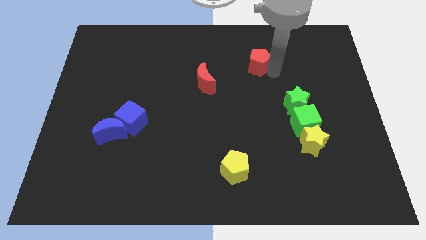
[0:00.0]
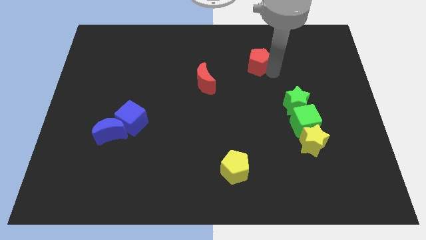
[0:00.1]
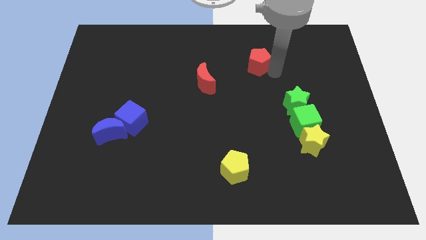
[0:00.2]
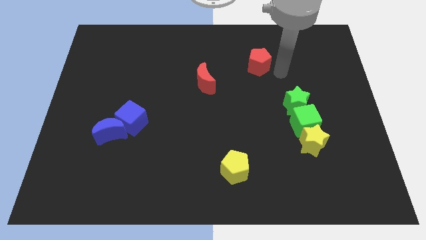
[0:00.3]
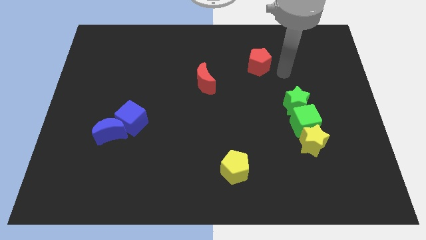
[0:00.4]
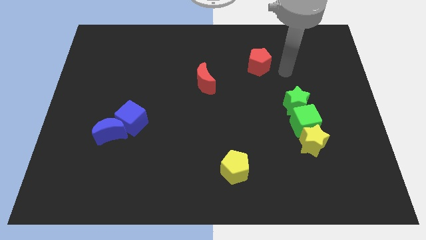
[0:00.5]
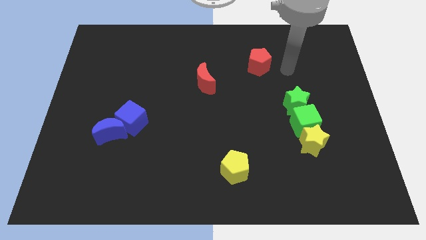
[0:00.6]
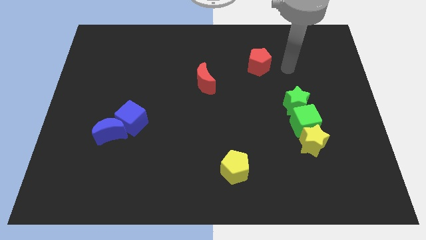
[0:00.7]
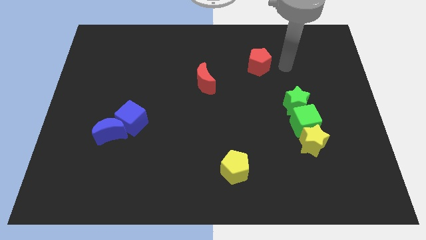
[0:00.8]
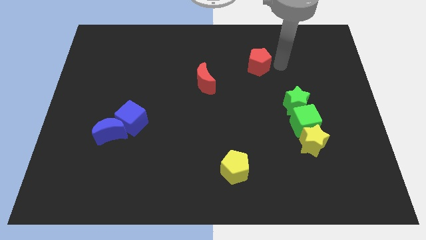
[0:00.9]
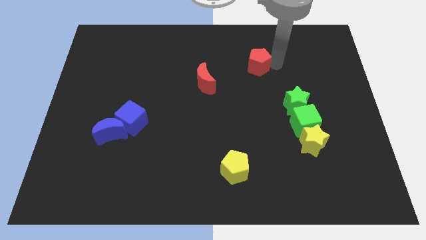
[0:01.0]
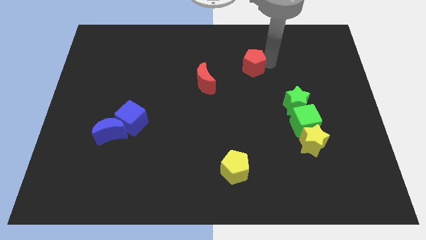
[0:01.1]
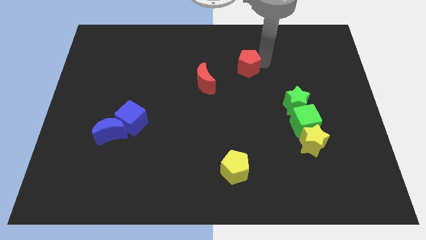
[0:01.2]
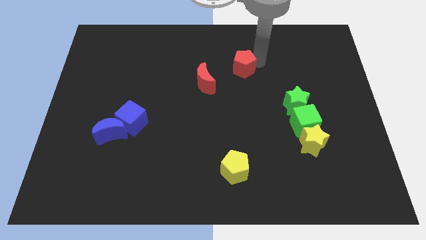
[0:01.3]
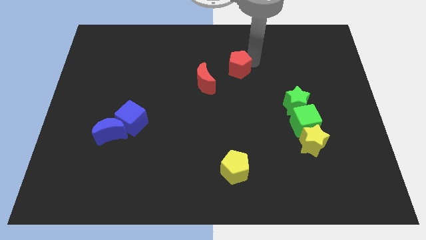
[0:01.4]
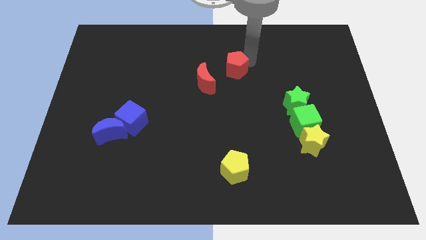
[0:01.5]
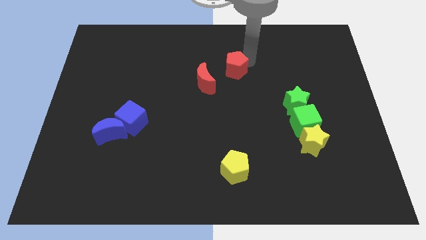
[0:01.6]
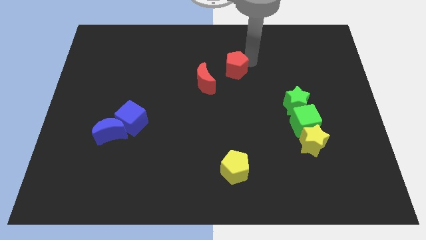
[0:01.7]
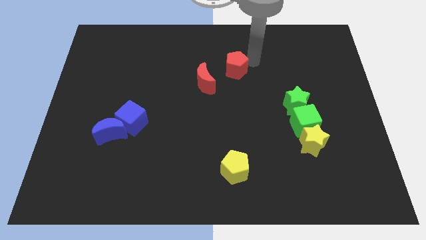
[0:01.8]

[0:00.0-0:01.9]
push the red pentagon towards the red crescent

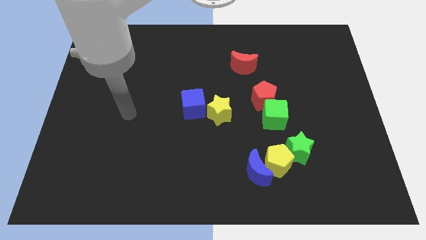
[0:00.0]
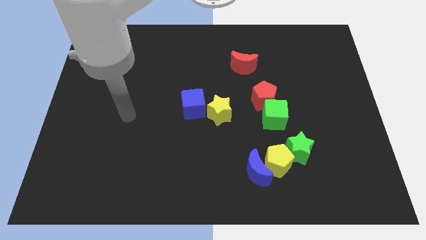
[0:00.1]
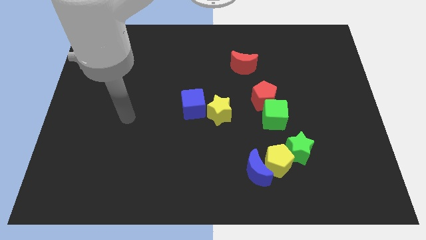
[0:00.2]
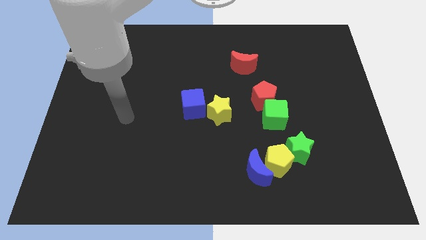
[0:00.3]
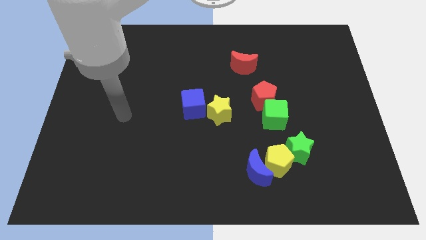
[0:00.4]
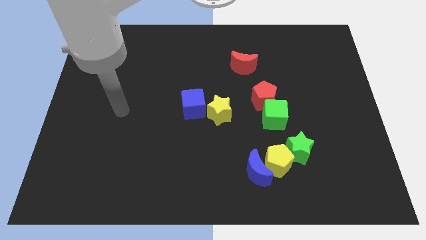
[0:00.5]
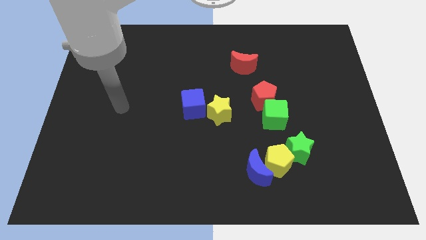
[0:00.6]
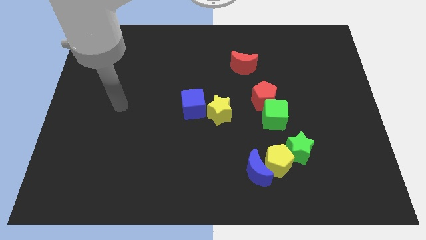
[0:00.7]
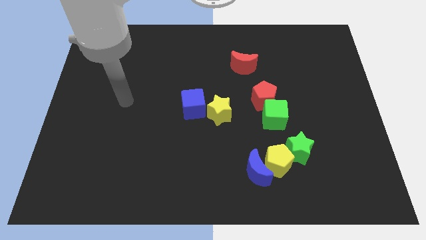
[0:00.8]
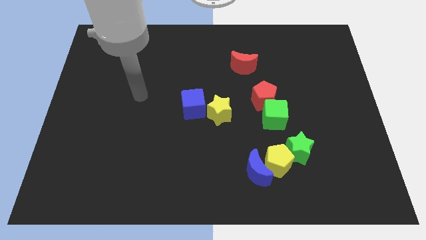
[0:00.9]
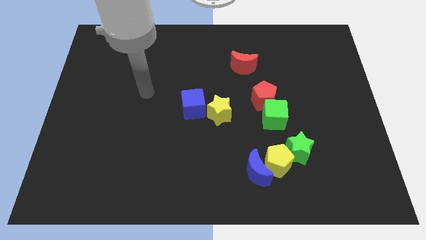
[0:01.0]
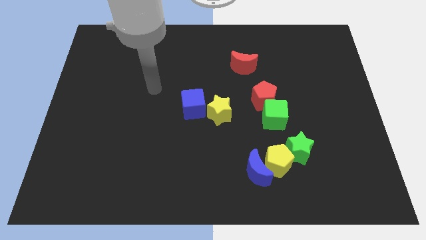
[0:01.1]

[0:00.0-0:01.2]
move the arm towards the top left side of the blue cube

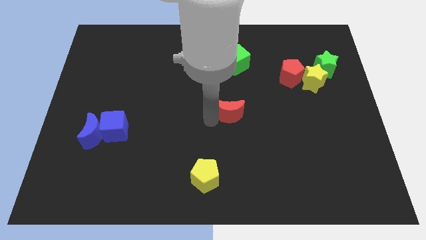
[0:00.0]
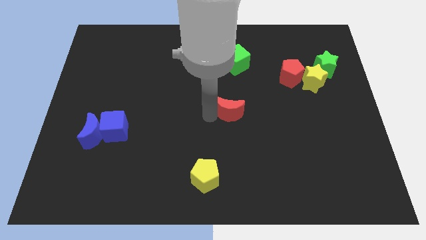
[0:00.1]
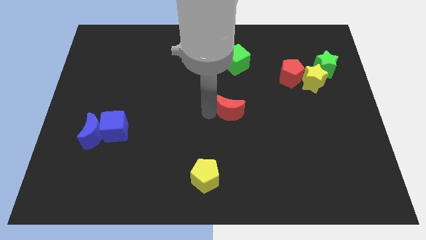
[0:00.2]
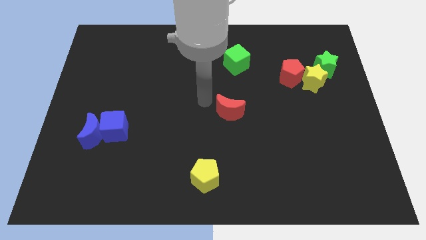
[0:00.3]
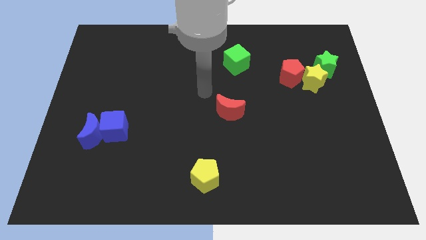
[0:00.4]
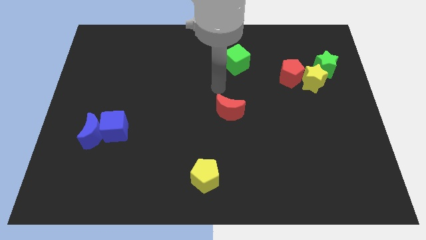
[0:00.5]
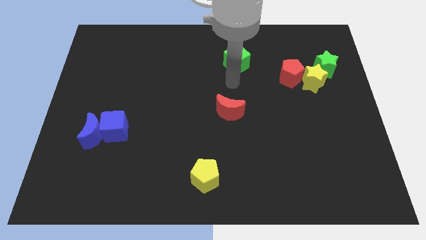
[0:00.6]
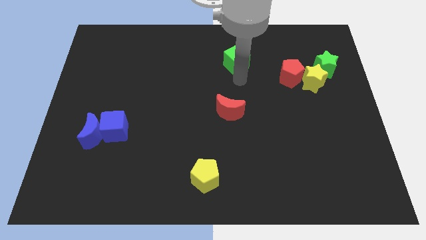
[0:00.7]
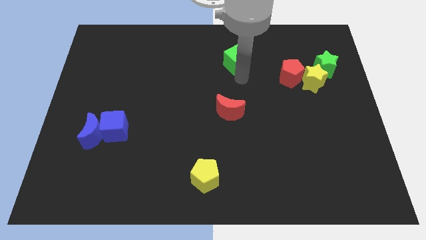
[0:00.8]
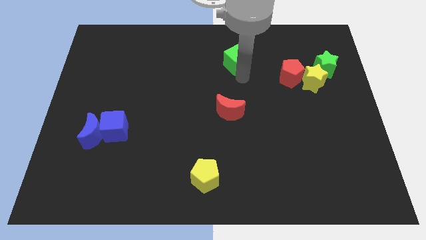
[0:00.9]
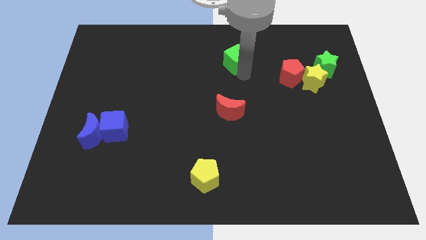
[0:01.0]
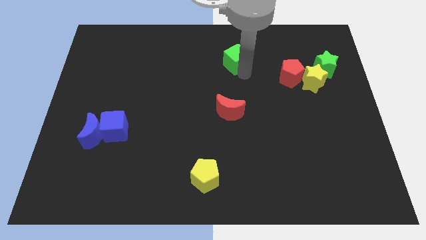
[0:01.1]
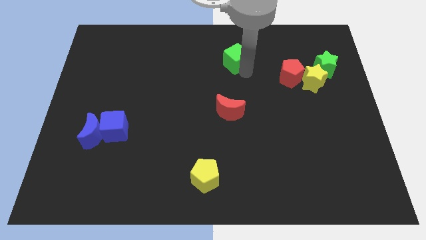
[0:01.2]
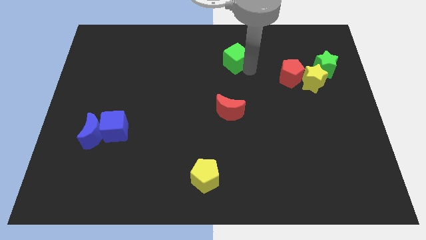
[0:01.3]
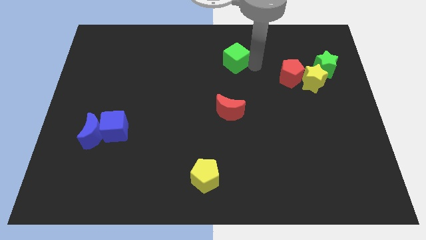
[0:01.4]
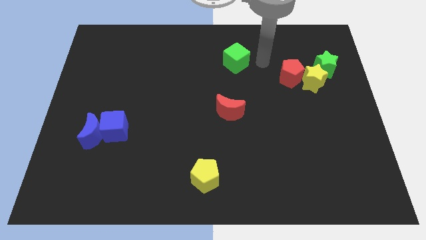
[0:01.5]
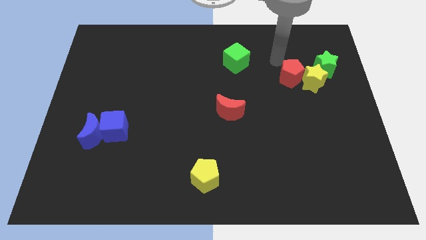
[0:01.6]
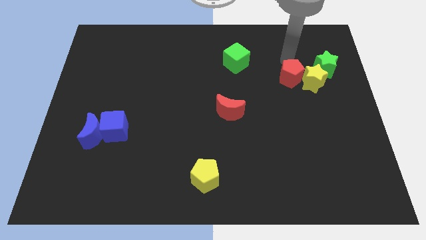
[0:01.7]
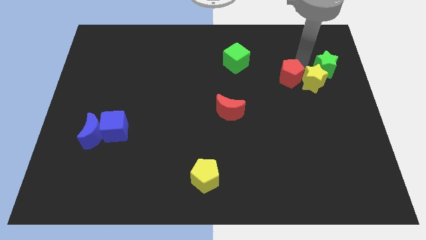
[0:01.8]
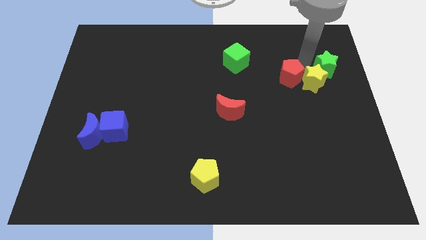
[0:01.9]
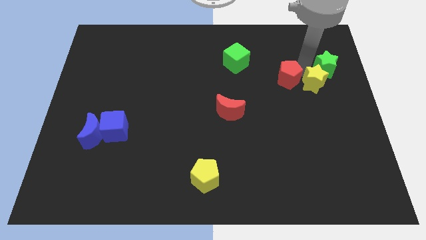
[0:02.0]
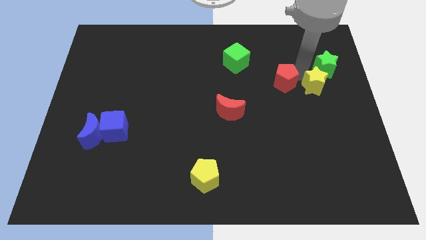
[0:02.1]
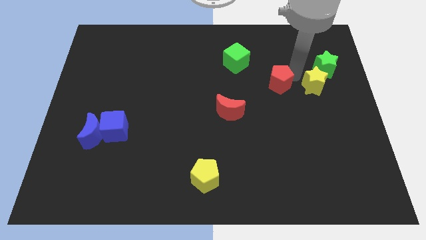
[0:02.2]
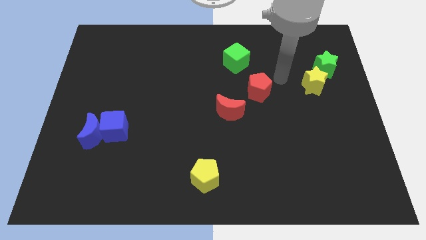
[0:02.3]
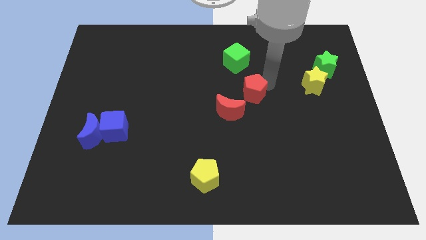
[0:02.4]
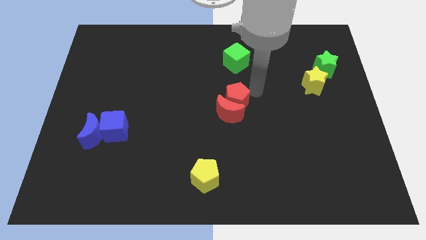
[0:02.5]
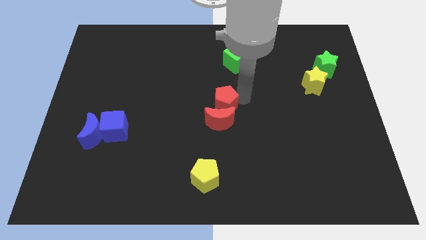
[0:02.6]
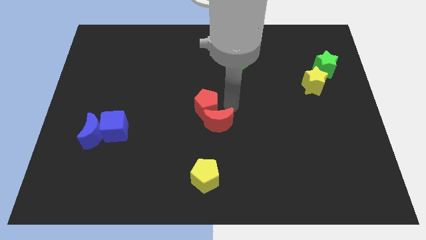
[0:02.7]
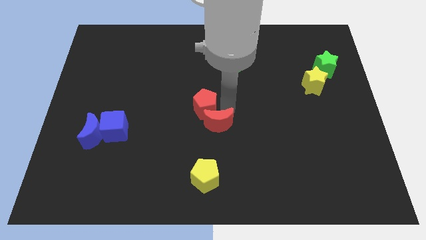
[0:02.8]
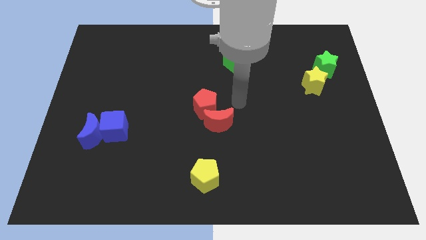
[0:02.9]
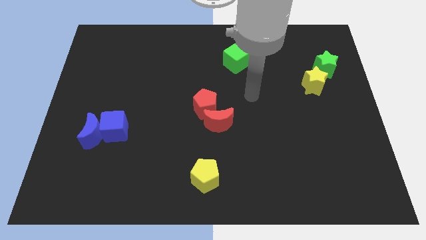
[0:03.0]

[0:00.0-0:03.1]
put the red pentagon at the center of the board

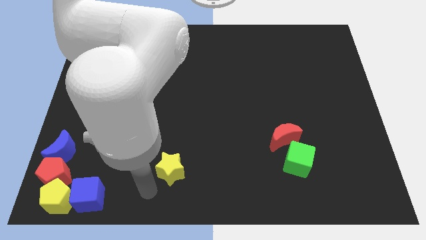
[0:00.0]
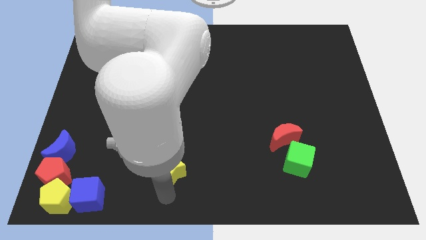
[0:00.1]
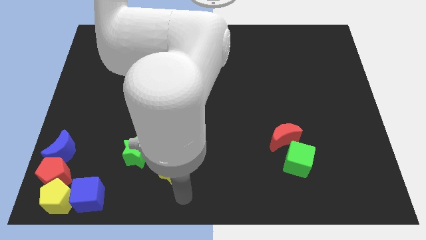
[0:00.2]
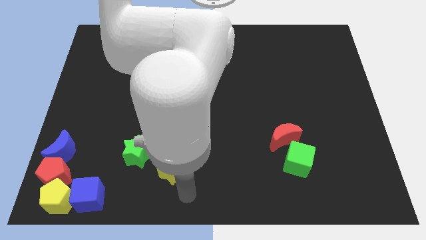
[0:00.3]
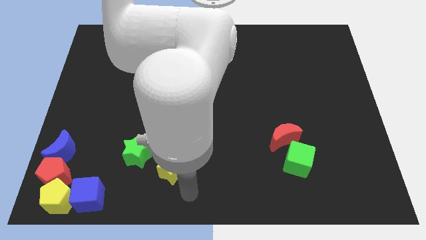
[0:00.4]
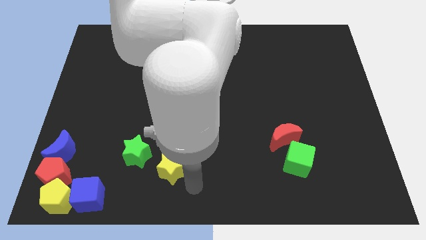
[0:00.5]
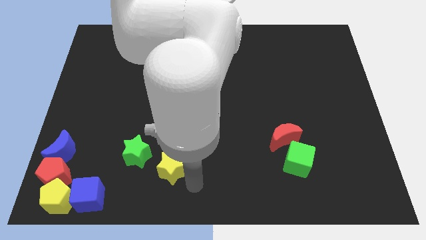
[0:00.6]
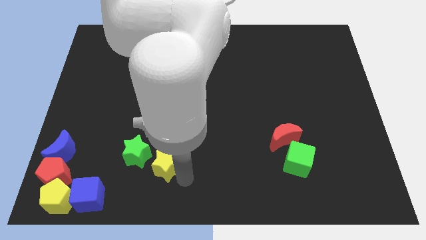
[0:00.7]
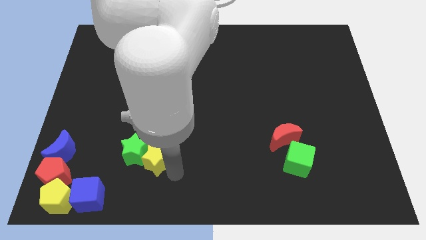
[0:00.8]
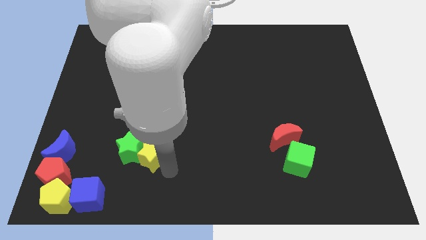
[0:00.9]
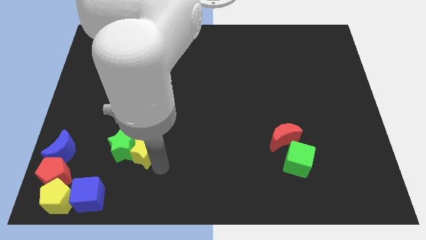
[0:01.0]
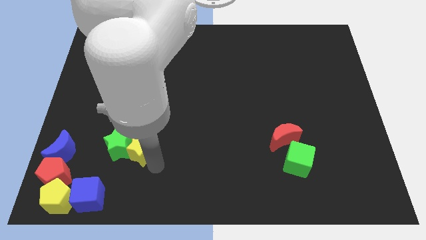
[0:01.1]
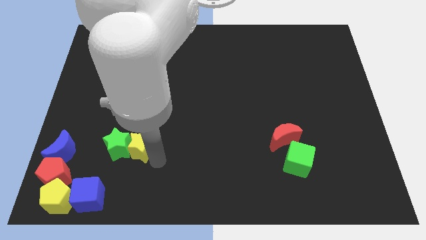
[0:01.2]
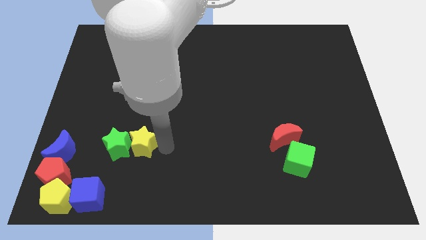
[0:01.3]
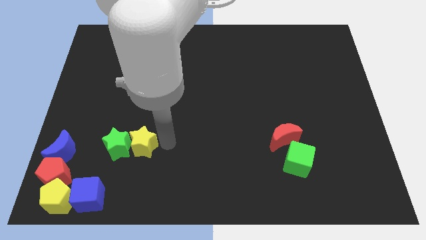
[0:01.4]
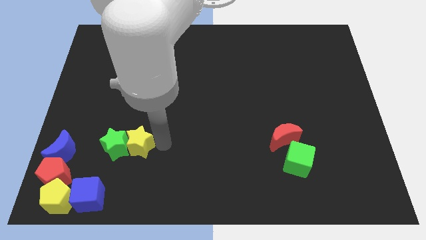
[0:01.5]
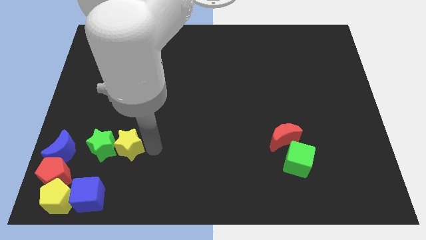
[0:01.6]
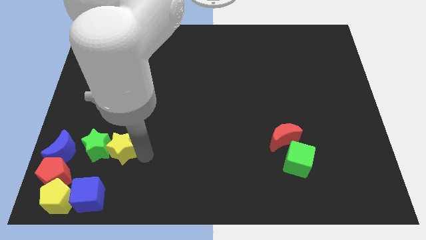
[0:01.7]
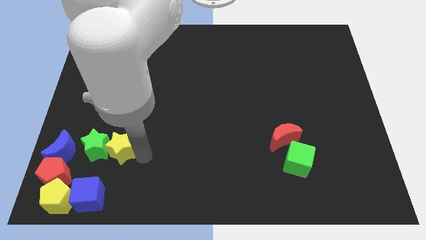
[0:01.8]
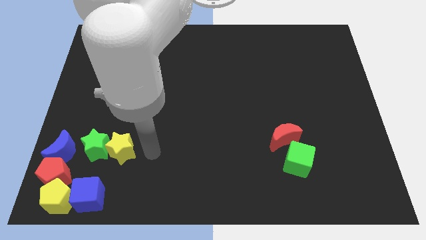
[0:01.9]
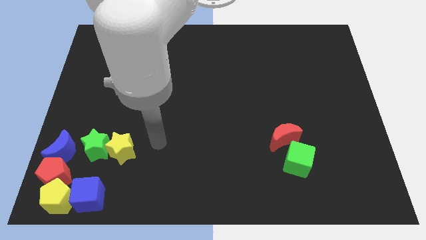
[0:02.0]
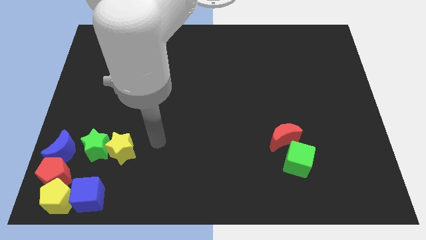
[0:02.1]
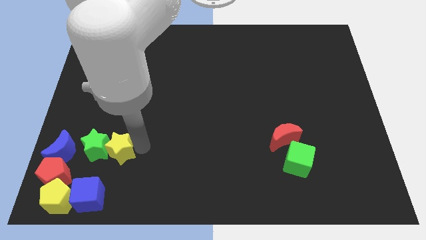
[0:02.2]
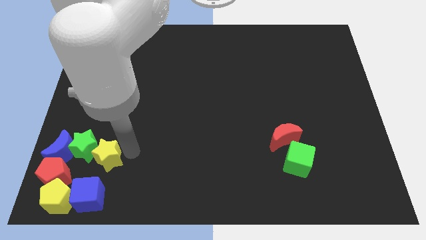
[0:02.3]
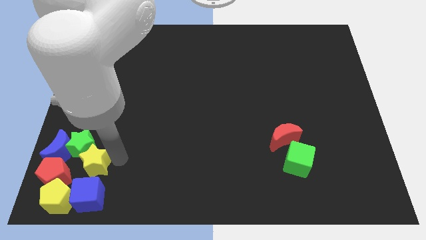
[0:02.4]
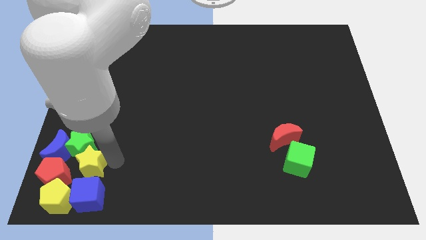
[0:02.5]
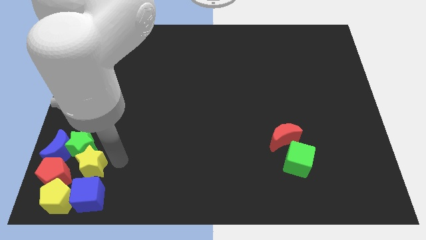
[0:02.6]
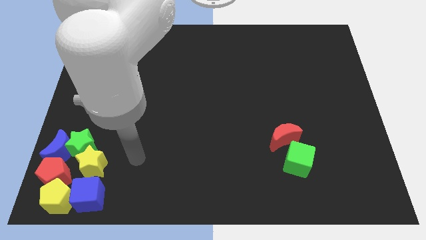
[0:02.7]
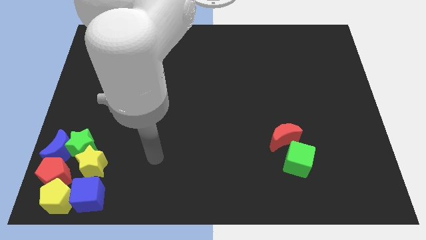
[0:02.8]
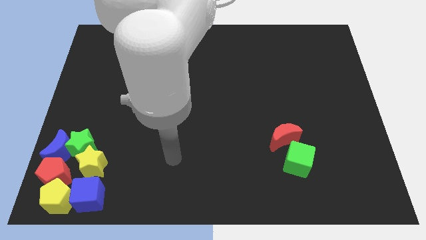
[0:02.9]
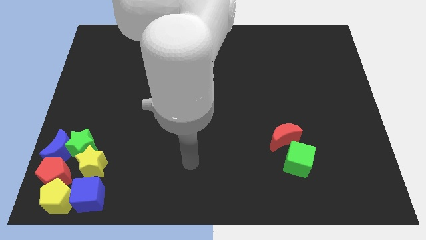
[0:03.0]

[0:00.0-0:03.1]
push yellow and green stars together into group of blocks
